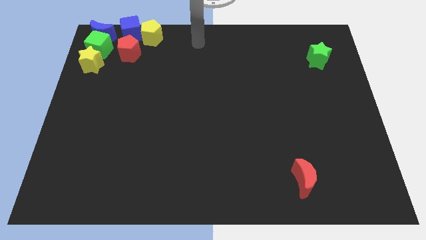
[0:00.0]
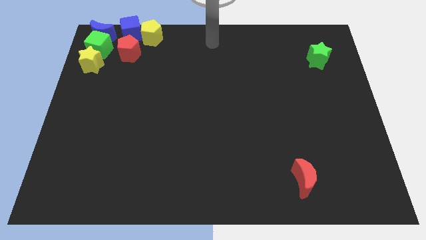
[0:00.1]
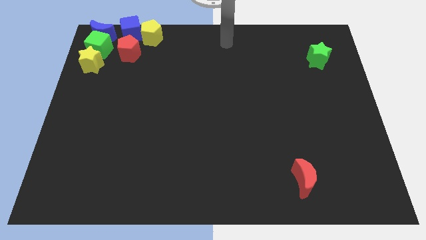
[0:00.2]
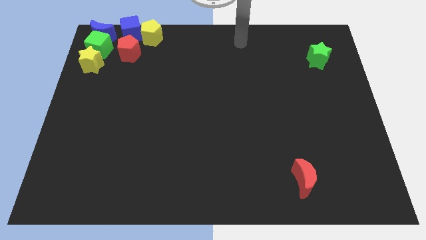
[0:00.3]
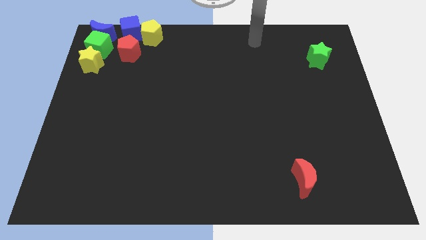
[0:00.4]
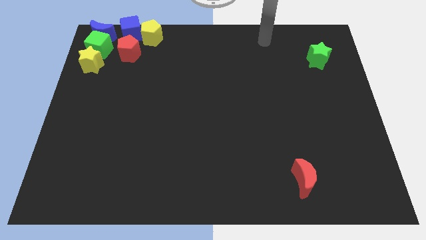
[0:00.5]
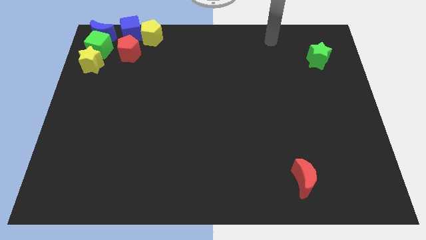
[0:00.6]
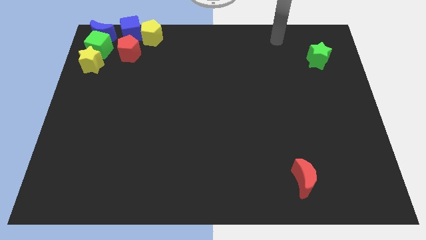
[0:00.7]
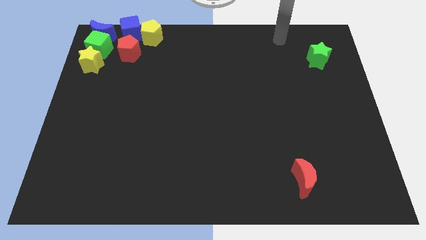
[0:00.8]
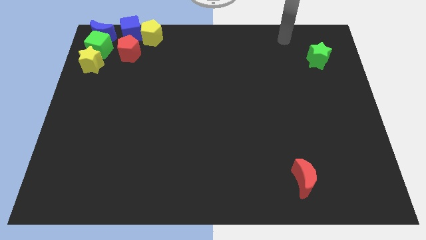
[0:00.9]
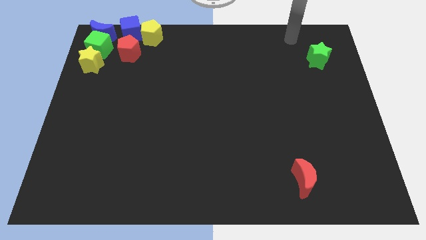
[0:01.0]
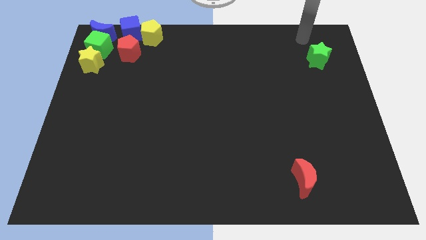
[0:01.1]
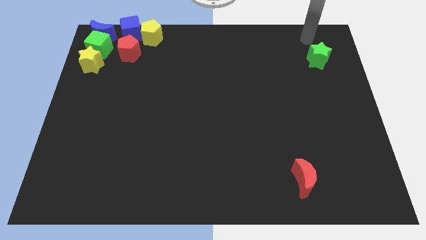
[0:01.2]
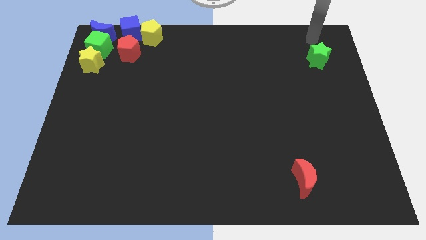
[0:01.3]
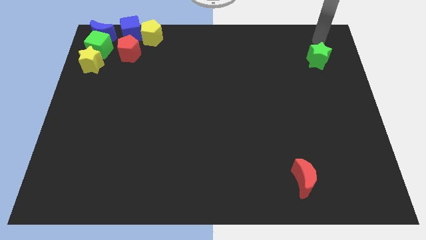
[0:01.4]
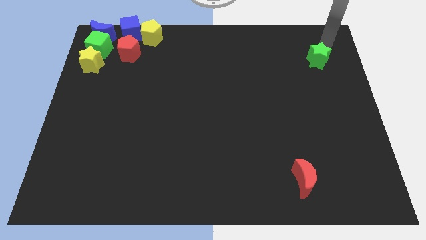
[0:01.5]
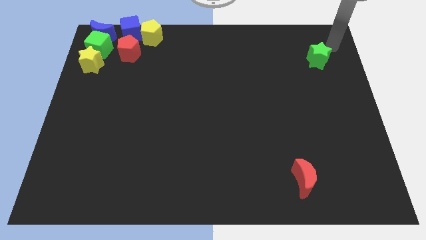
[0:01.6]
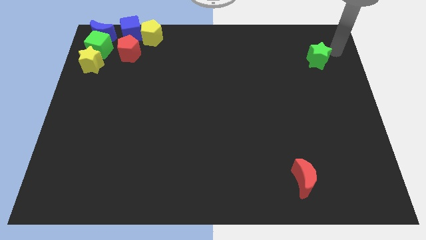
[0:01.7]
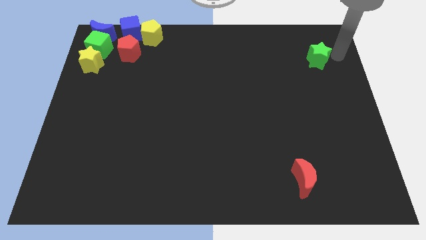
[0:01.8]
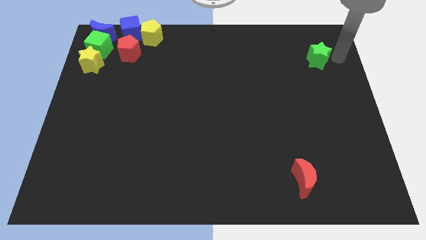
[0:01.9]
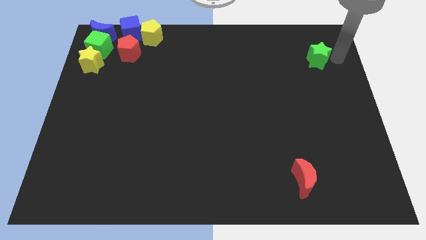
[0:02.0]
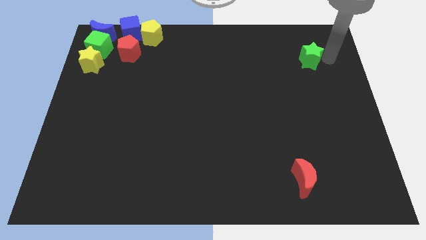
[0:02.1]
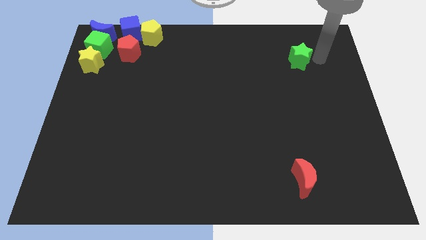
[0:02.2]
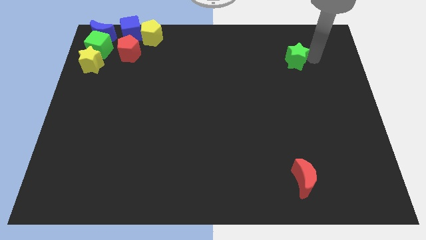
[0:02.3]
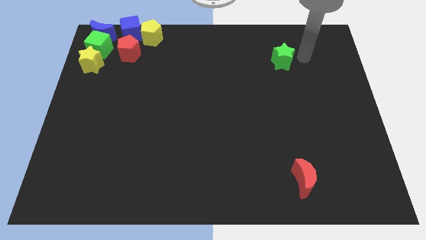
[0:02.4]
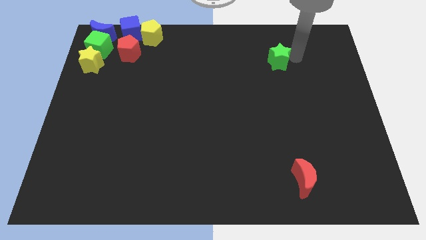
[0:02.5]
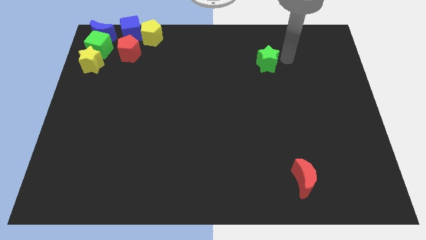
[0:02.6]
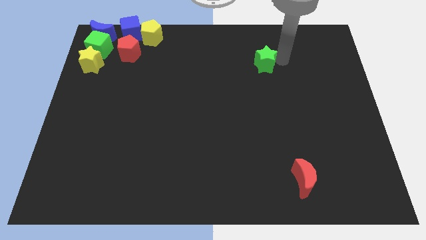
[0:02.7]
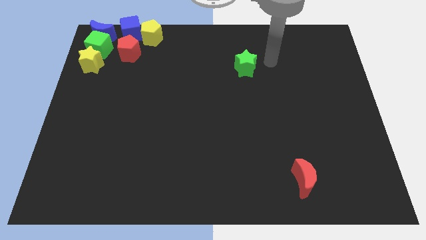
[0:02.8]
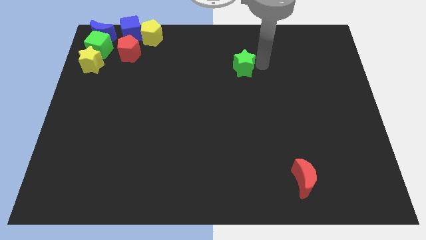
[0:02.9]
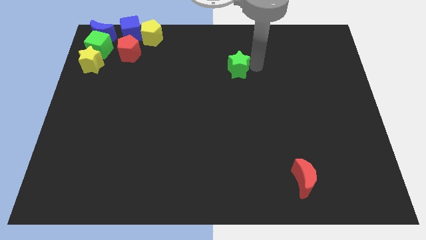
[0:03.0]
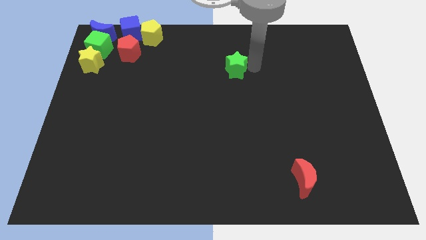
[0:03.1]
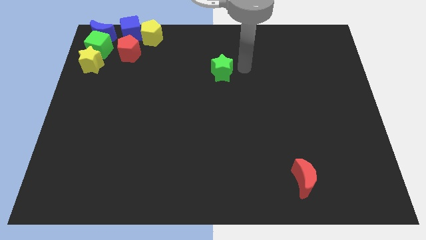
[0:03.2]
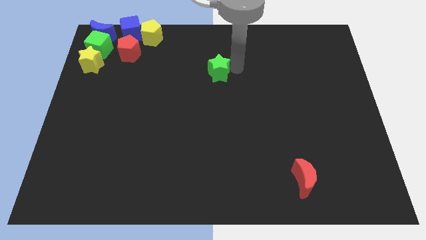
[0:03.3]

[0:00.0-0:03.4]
move your arm towards the center of the board

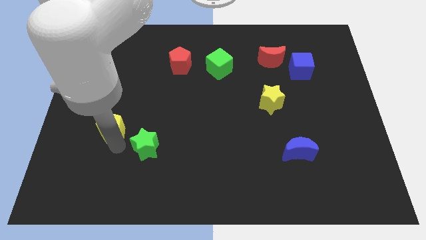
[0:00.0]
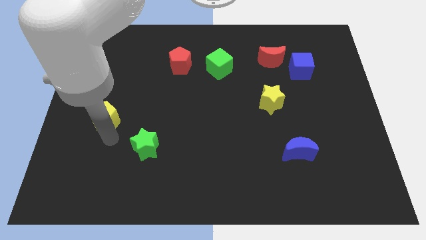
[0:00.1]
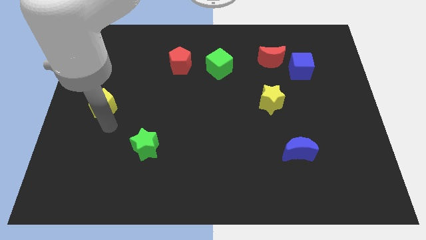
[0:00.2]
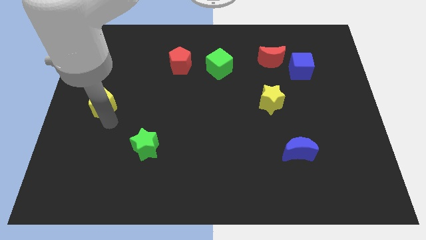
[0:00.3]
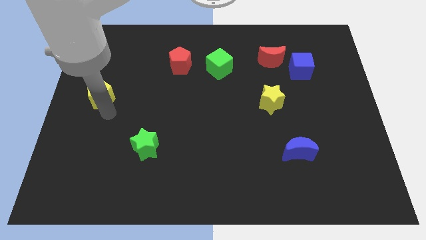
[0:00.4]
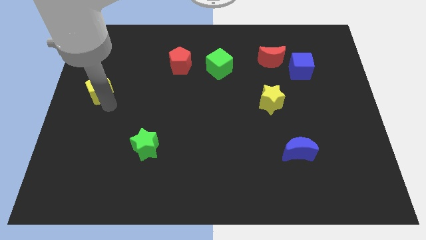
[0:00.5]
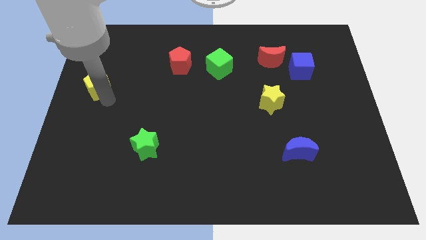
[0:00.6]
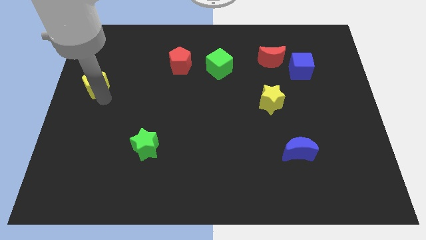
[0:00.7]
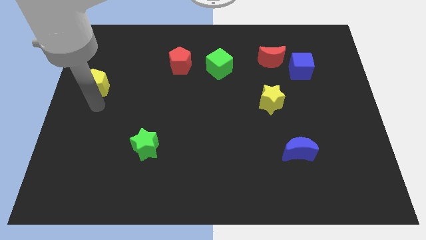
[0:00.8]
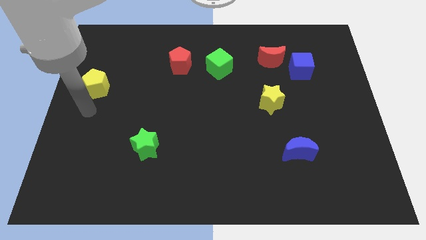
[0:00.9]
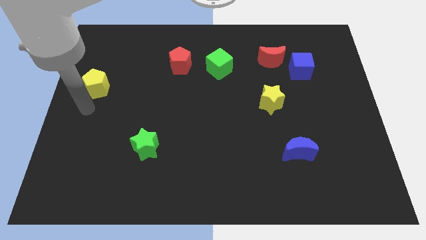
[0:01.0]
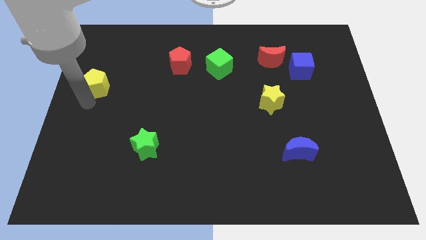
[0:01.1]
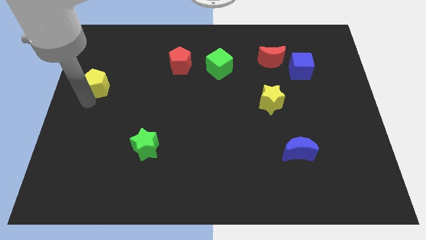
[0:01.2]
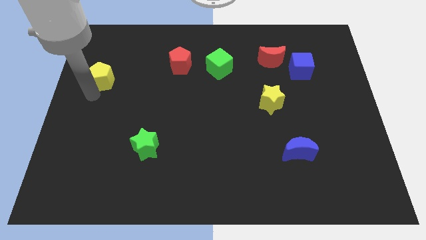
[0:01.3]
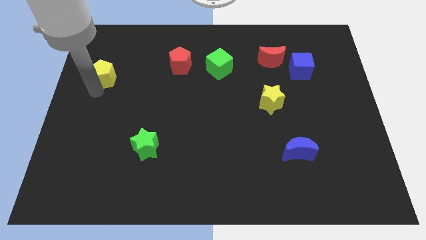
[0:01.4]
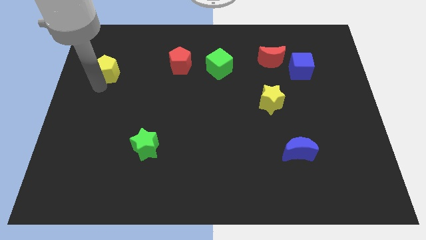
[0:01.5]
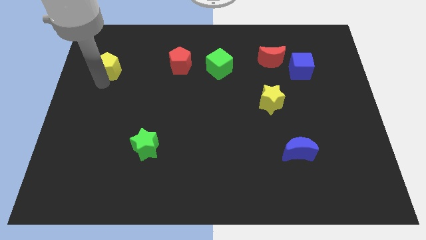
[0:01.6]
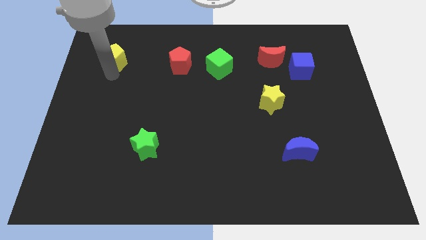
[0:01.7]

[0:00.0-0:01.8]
place the yellow pentagon horizontally to left of red pentagon

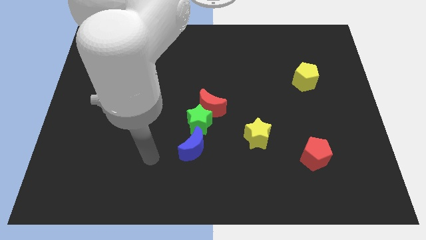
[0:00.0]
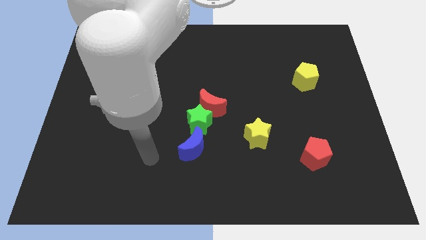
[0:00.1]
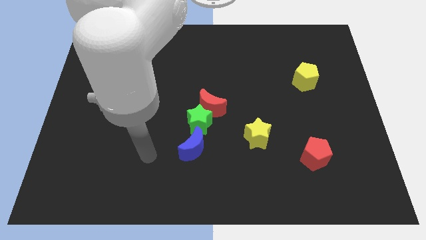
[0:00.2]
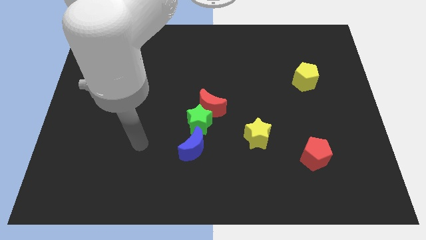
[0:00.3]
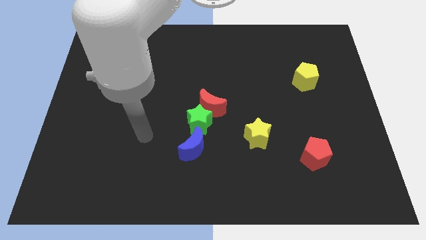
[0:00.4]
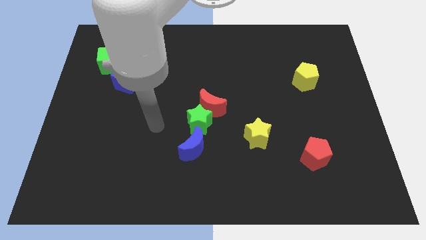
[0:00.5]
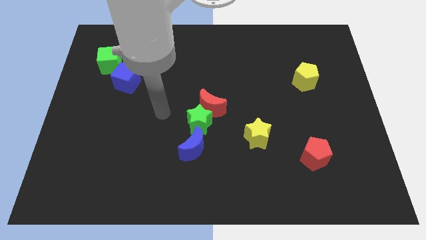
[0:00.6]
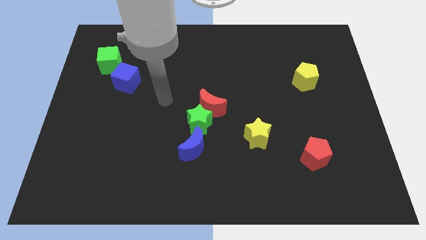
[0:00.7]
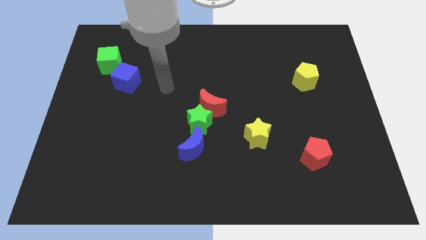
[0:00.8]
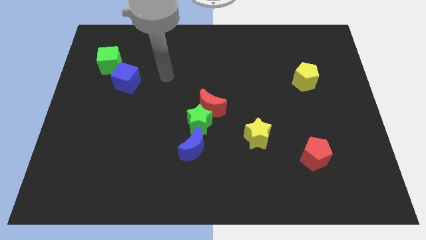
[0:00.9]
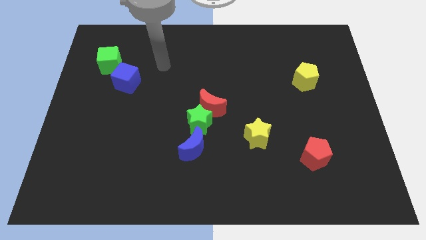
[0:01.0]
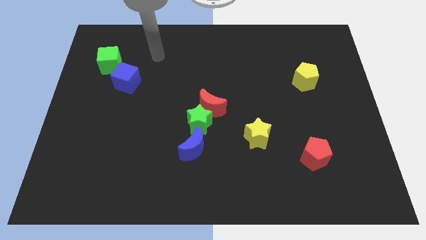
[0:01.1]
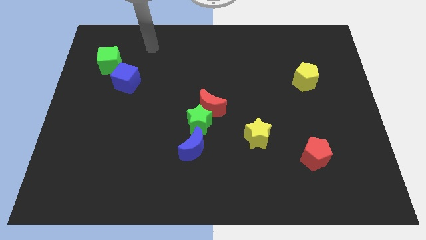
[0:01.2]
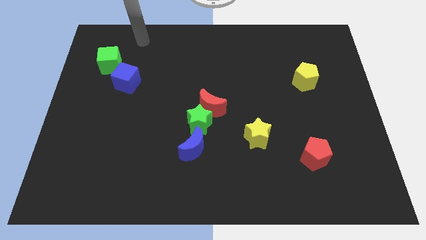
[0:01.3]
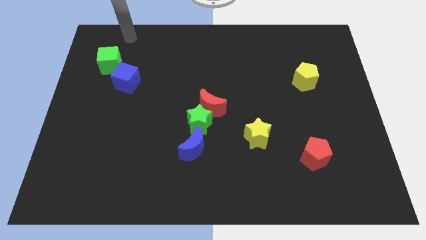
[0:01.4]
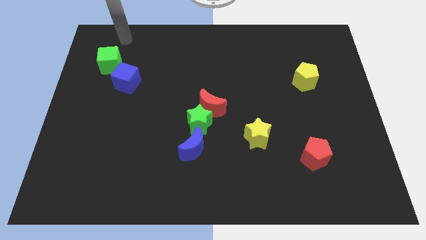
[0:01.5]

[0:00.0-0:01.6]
move your arm towards the green cube

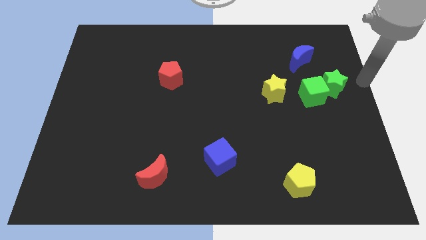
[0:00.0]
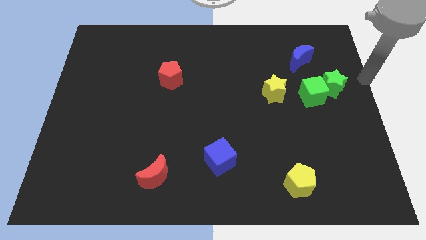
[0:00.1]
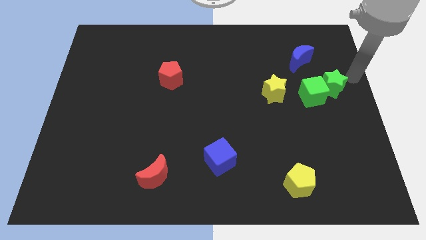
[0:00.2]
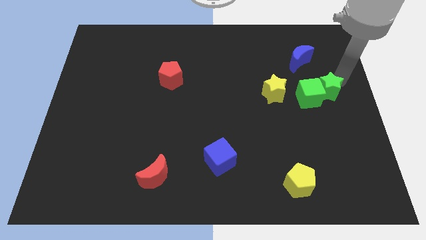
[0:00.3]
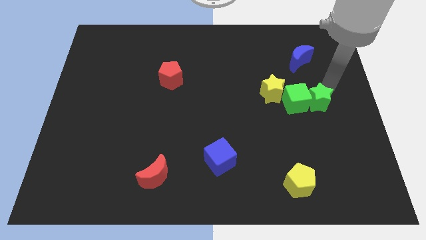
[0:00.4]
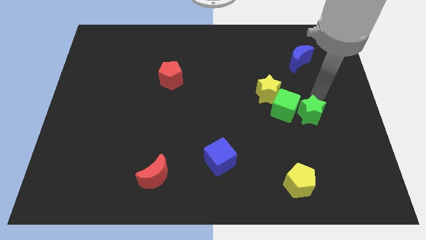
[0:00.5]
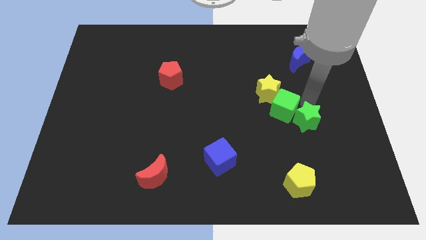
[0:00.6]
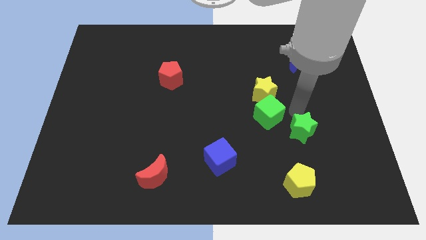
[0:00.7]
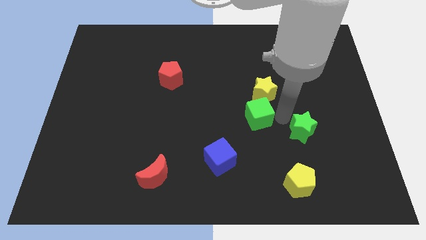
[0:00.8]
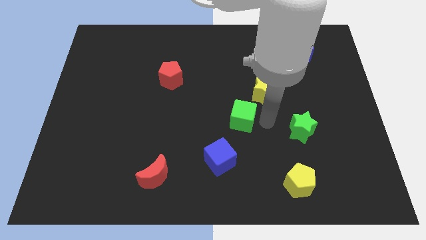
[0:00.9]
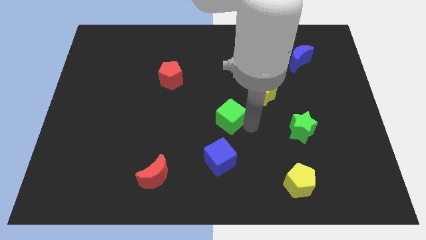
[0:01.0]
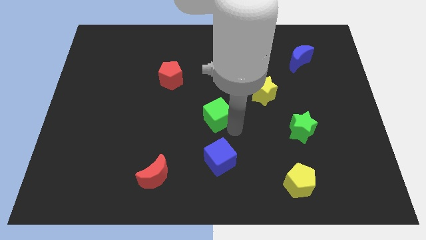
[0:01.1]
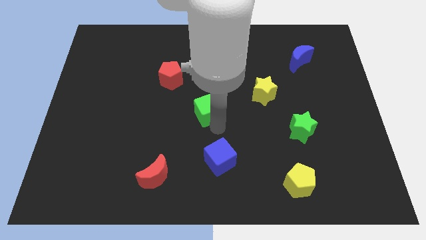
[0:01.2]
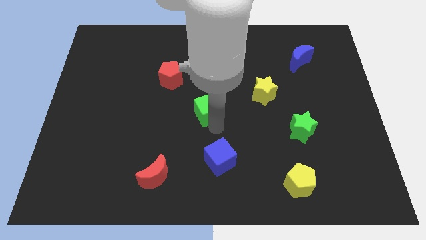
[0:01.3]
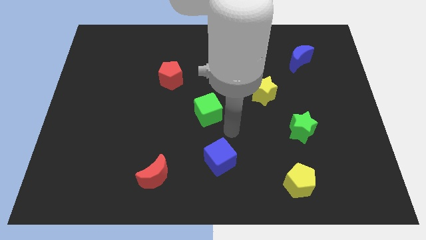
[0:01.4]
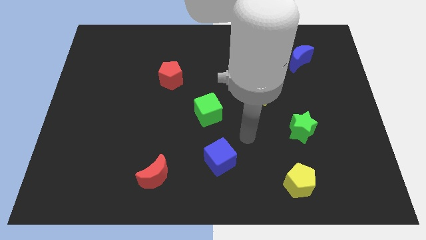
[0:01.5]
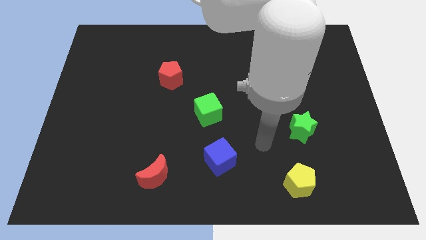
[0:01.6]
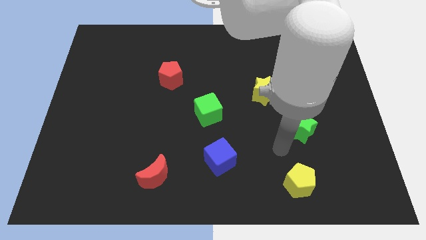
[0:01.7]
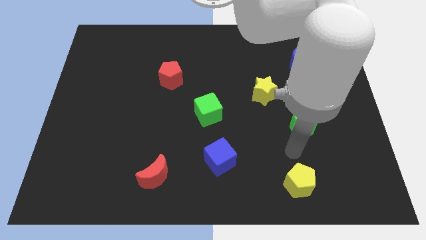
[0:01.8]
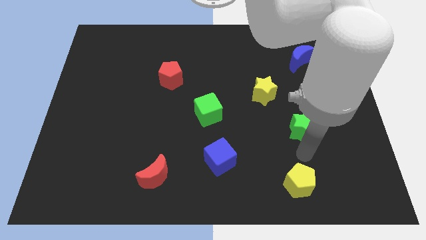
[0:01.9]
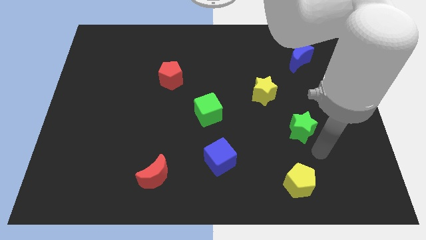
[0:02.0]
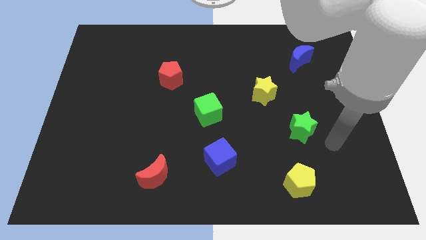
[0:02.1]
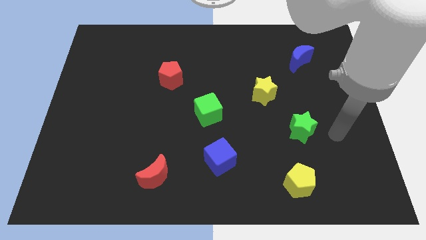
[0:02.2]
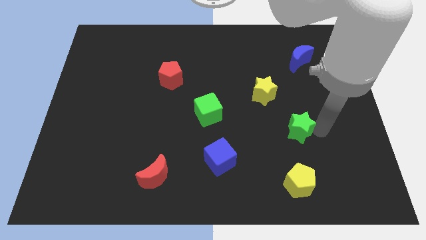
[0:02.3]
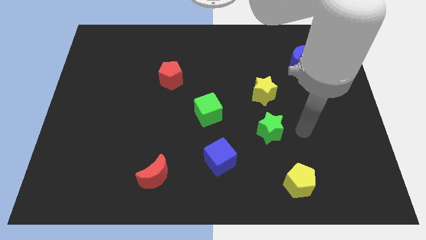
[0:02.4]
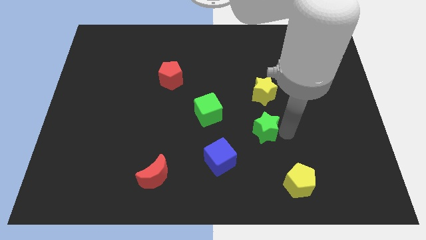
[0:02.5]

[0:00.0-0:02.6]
place the green star below the yellow star
